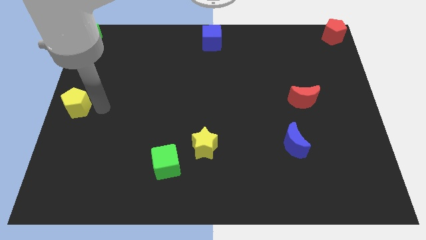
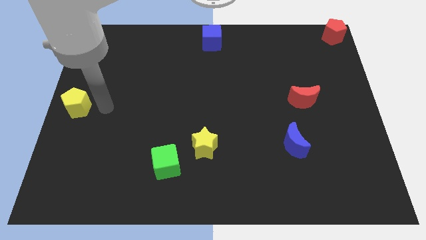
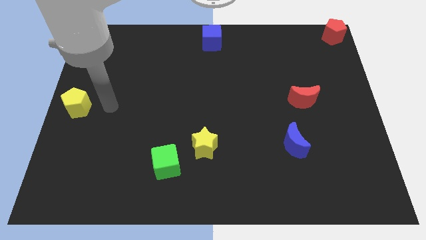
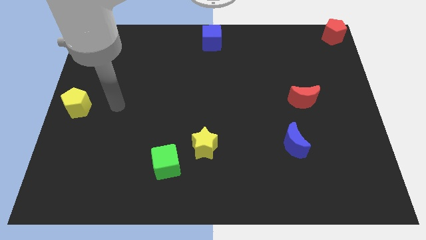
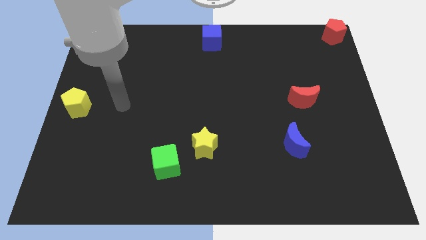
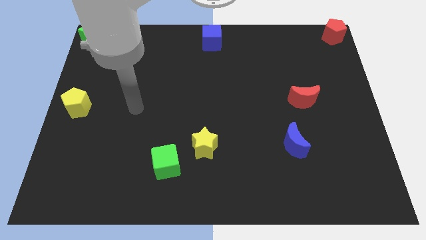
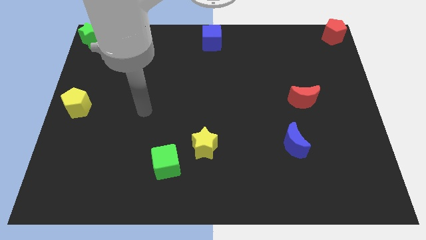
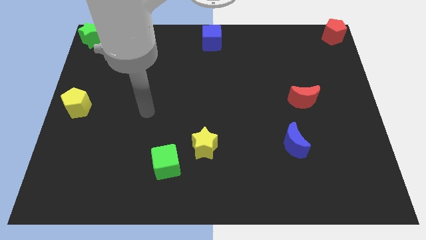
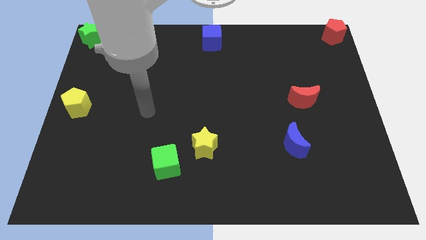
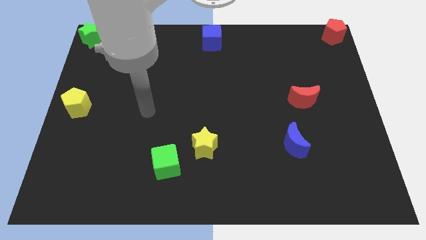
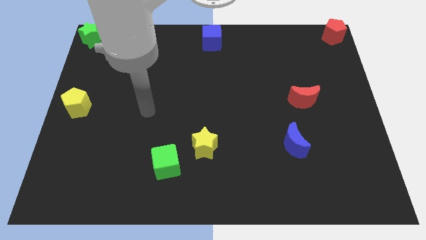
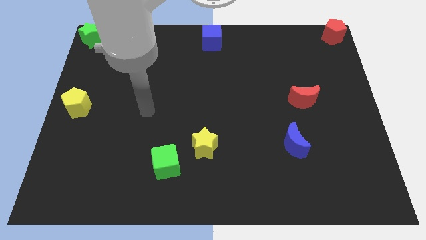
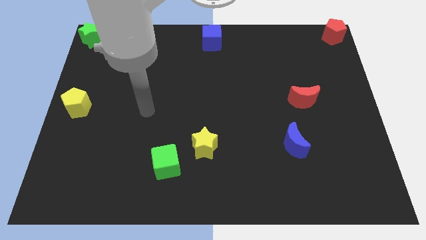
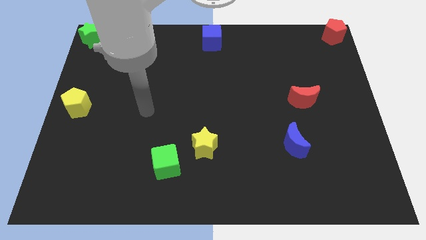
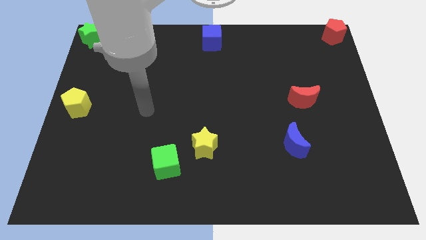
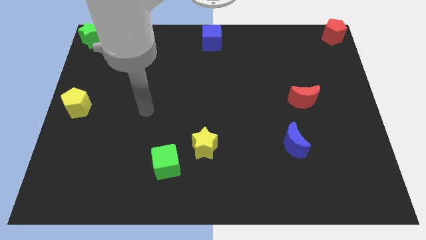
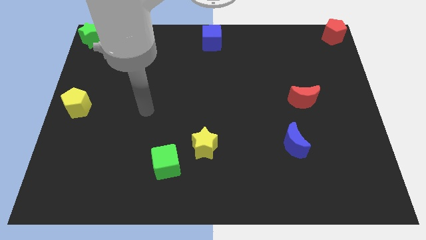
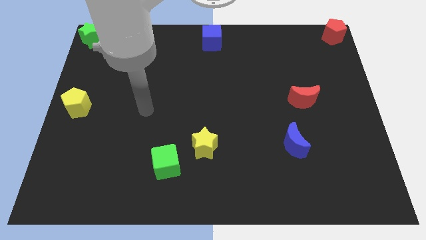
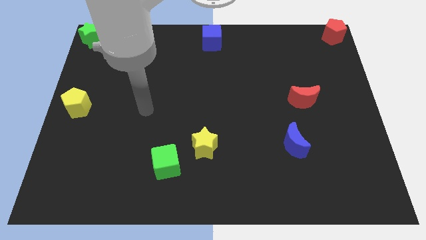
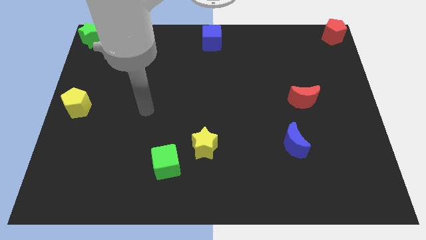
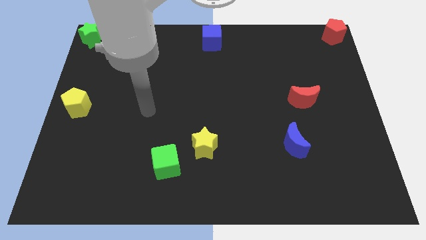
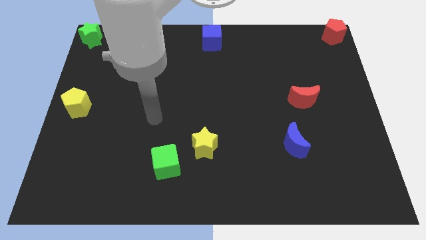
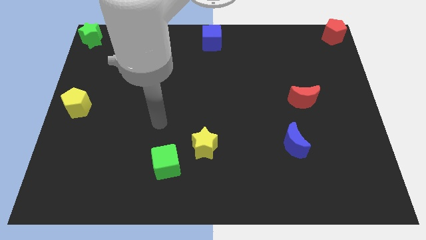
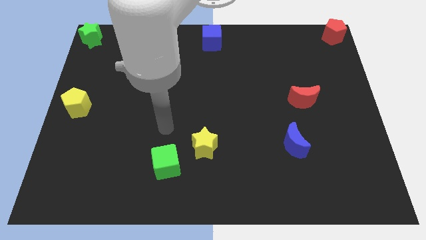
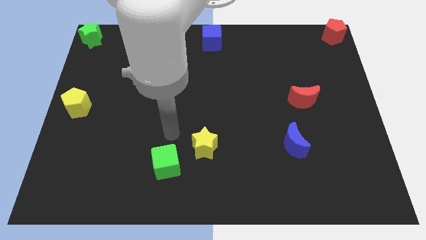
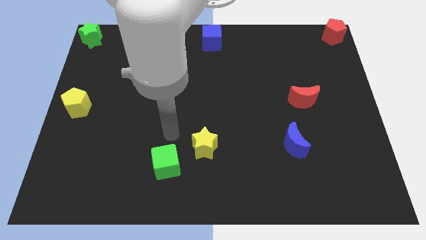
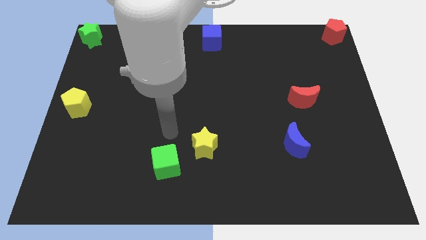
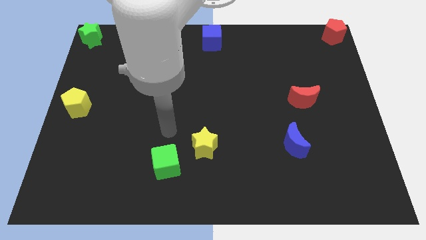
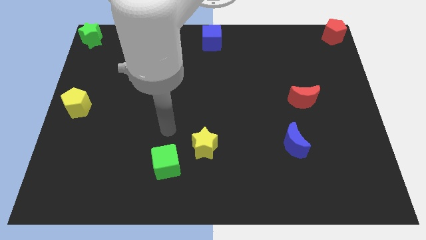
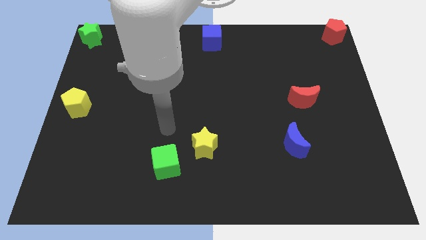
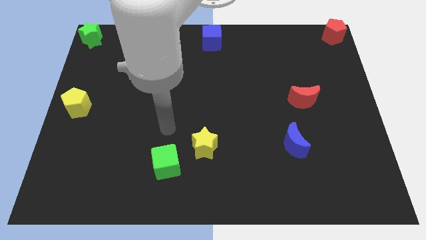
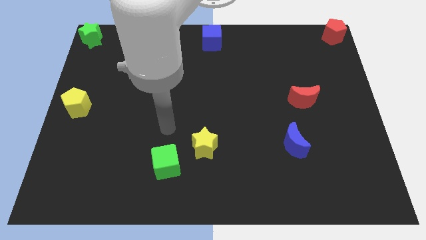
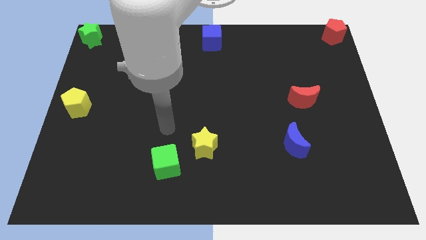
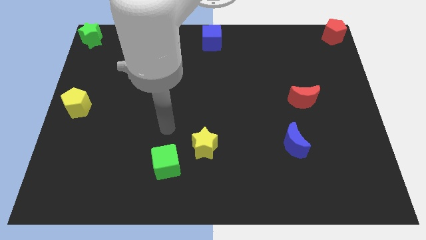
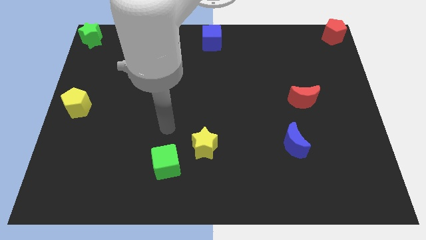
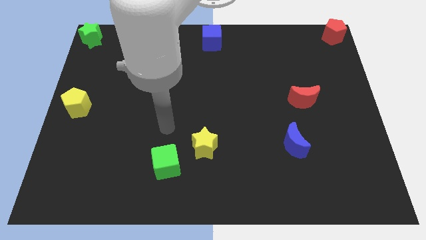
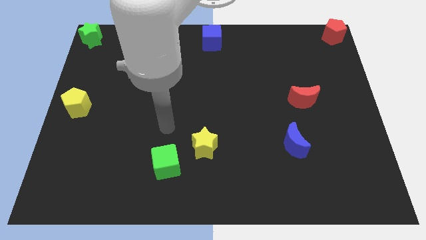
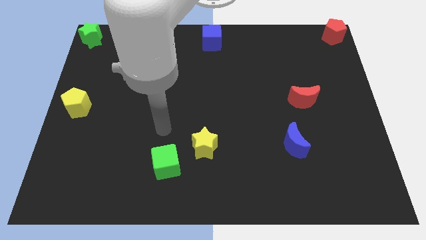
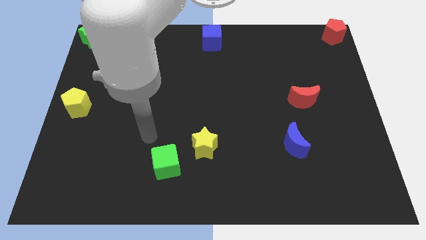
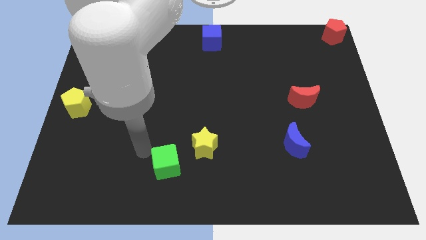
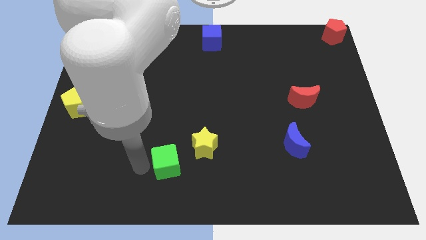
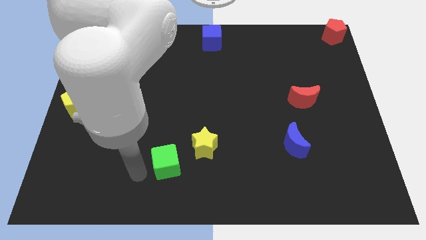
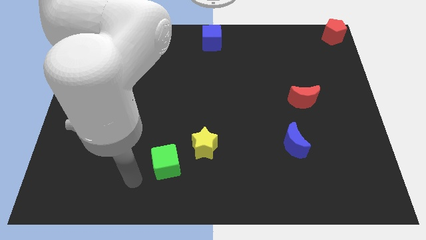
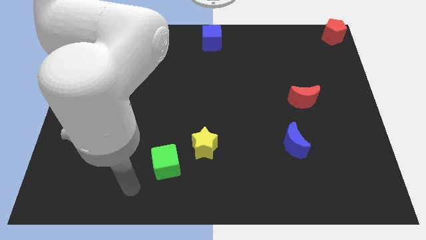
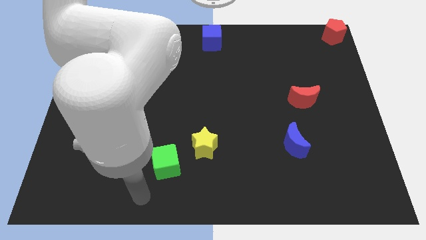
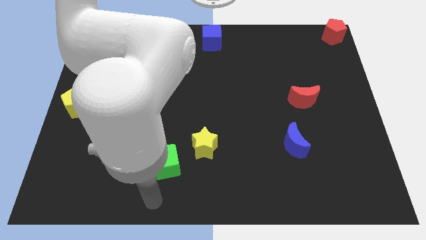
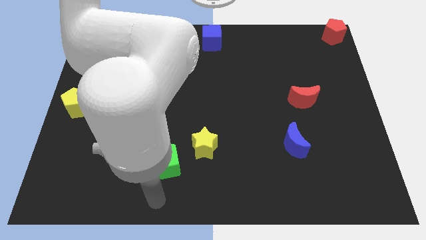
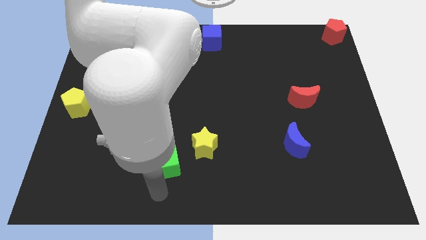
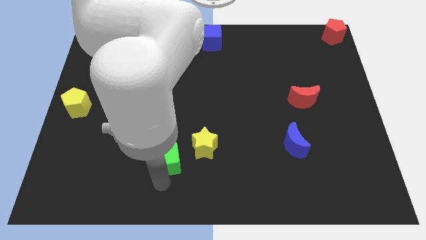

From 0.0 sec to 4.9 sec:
move the arm towards green cube

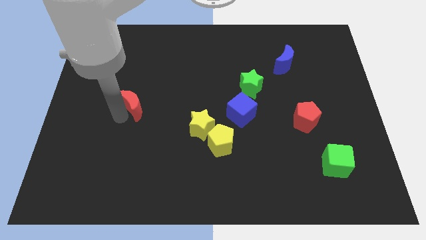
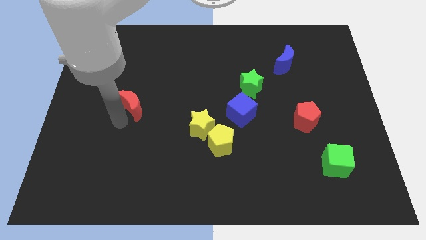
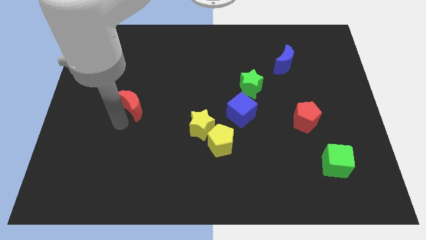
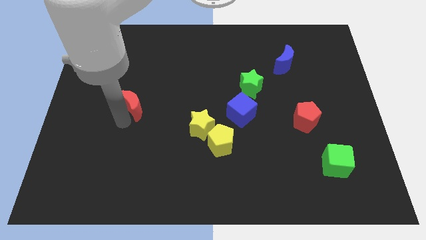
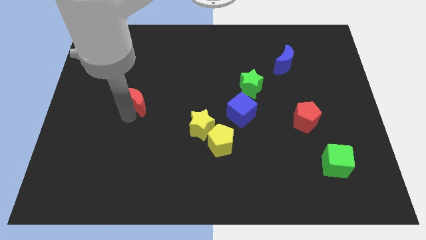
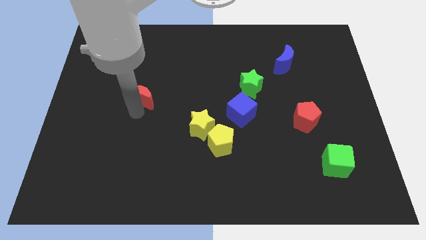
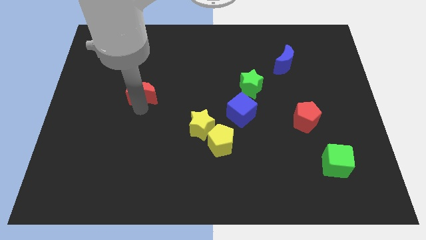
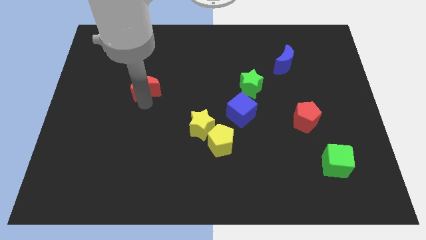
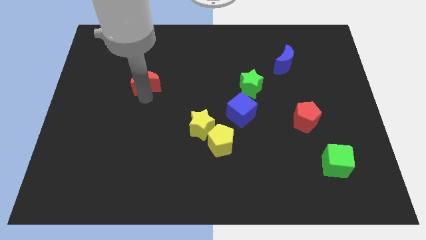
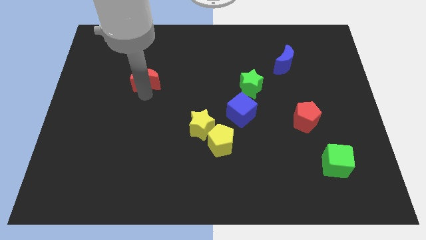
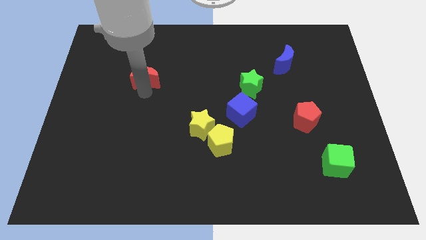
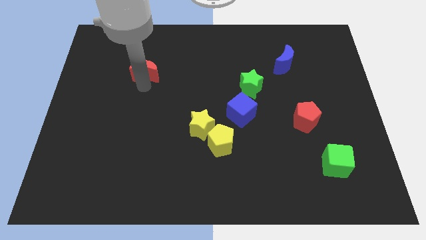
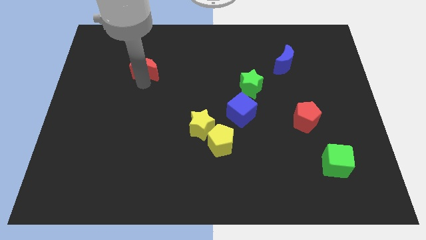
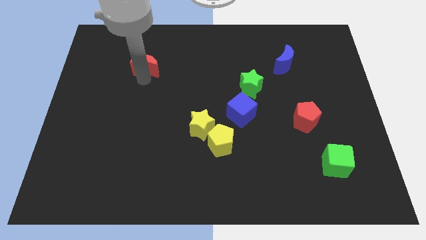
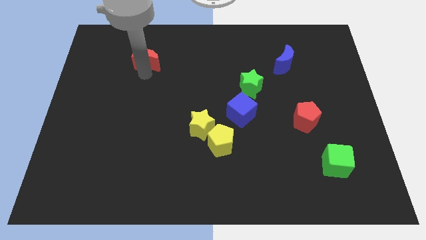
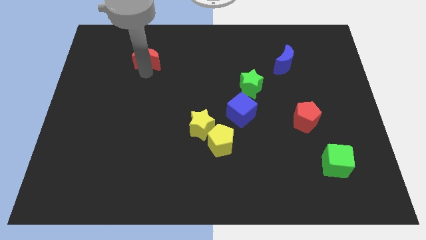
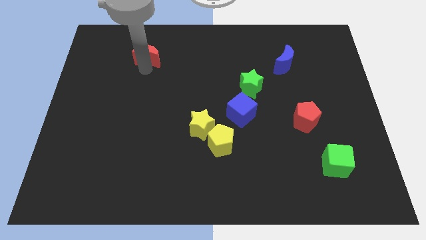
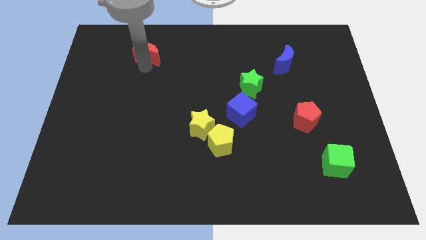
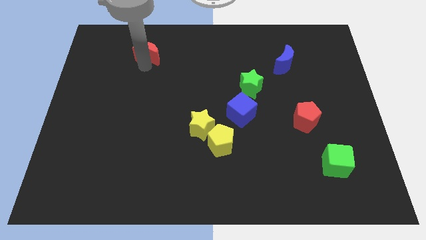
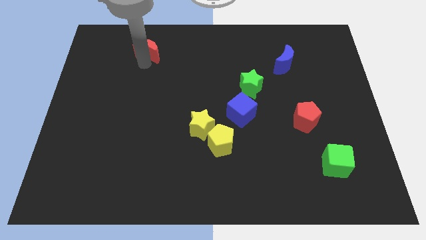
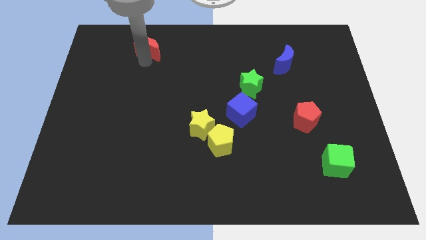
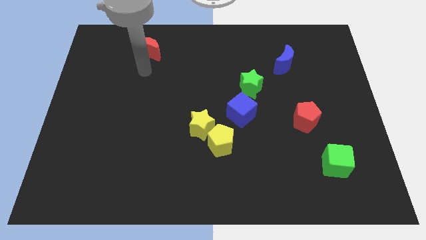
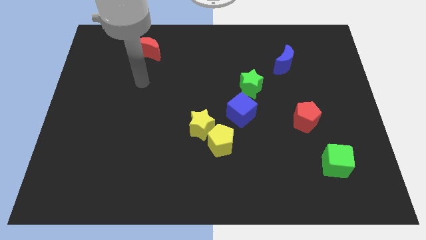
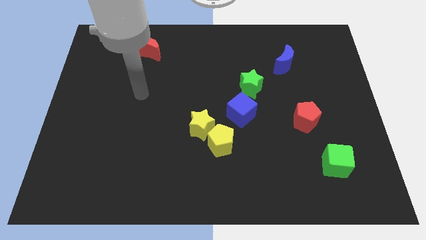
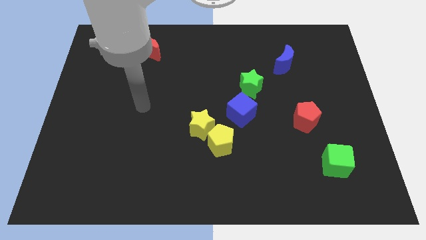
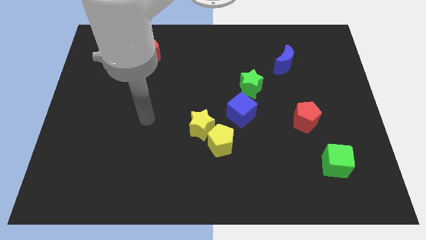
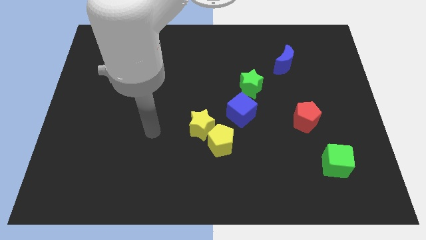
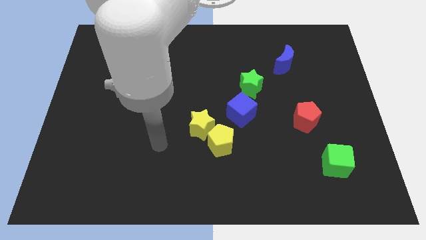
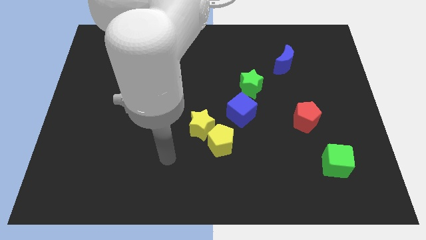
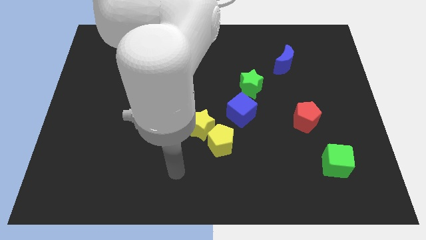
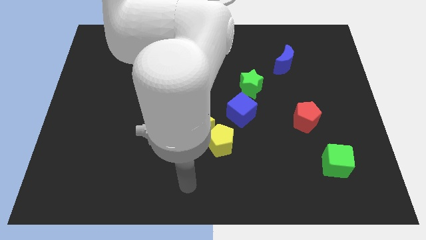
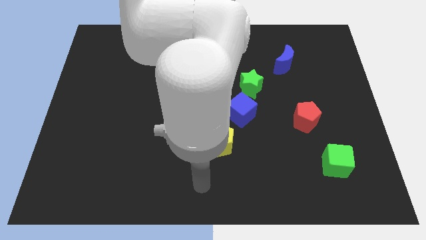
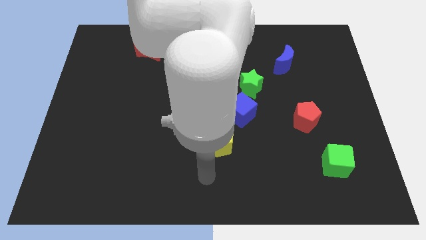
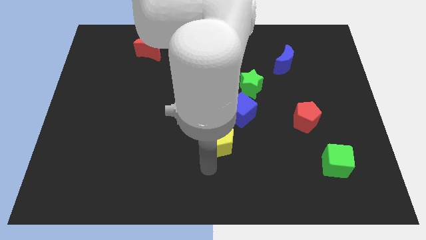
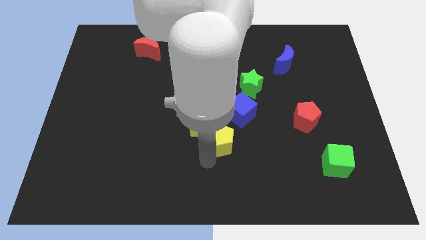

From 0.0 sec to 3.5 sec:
slide the red crescent slightly towards up

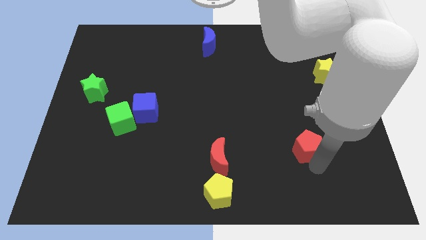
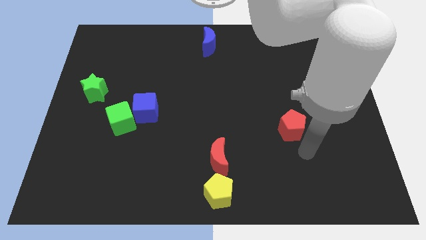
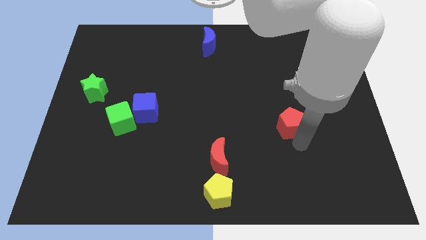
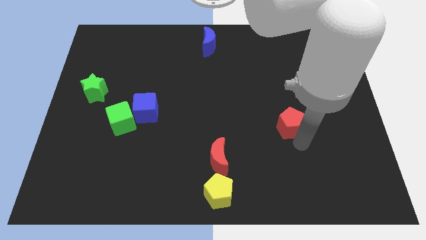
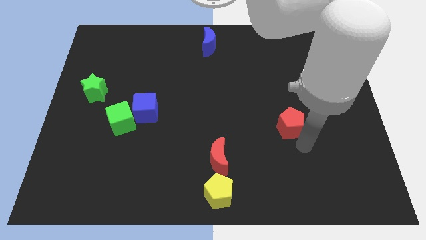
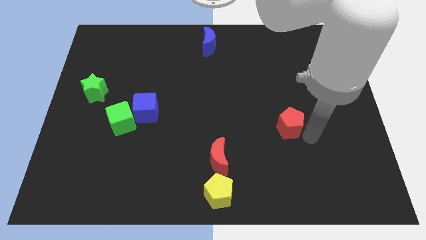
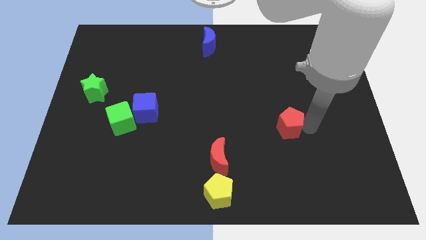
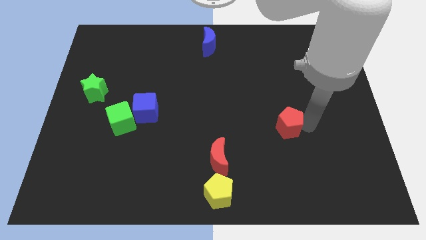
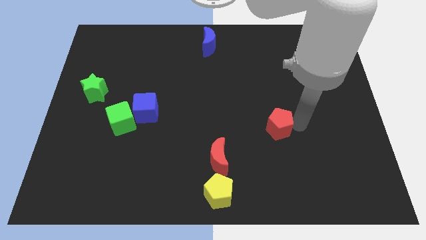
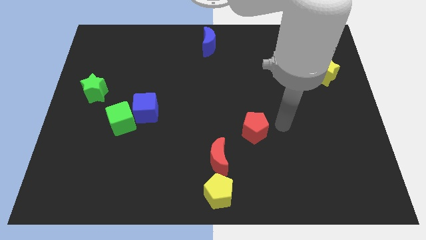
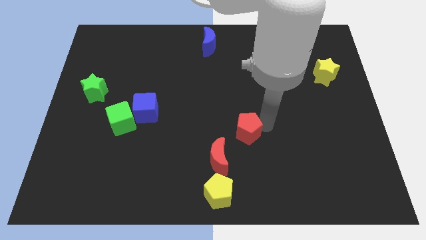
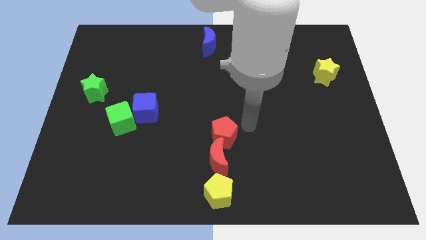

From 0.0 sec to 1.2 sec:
push red pentagon slightly to the left
